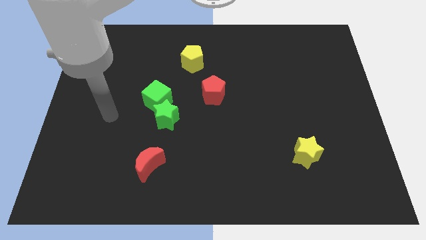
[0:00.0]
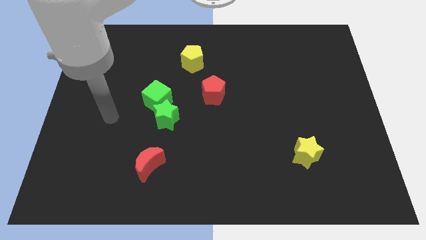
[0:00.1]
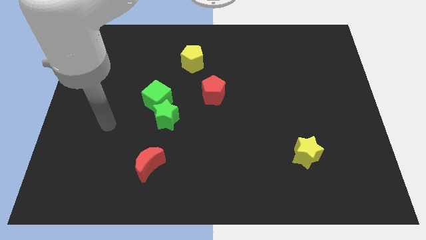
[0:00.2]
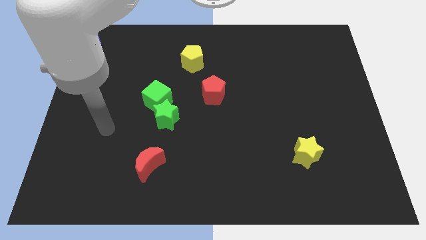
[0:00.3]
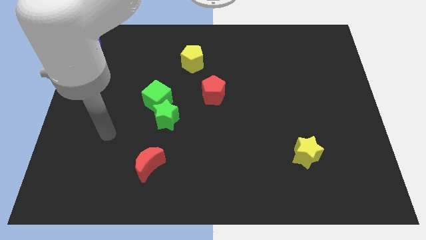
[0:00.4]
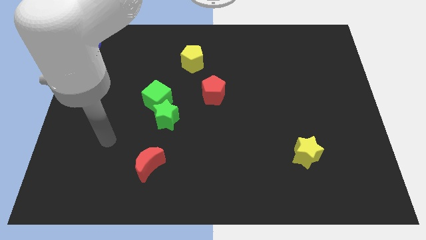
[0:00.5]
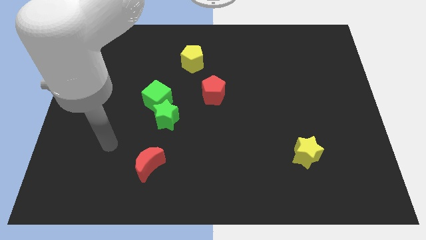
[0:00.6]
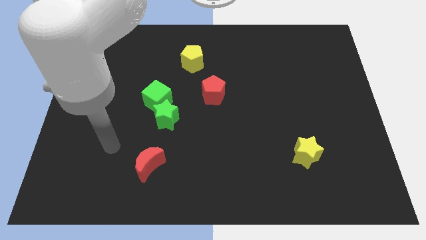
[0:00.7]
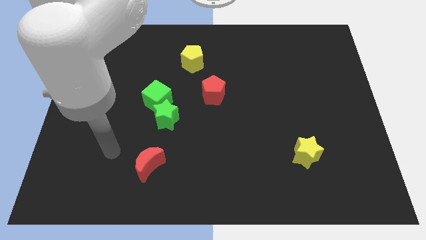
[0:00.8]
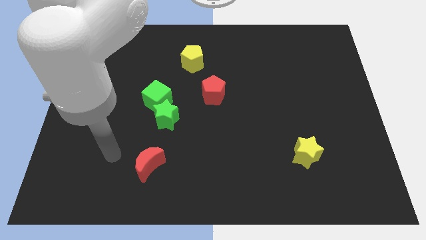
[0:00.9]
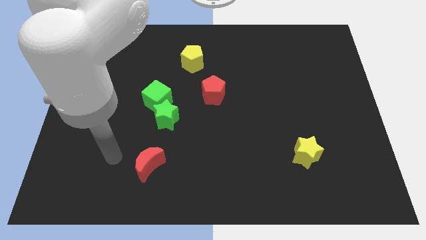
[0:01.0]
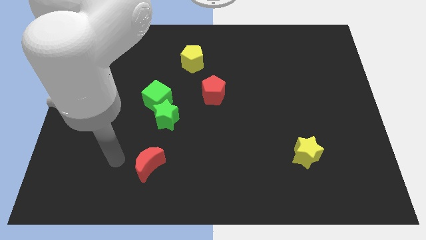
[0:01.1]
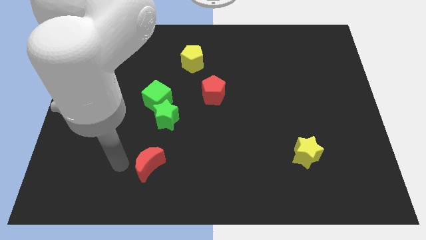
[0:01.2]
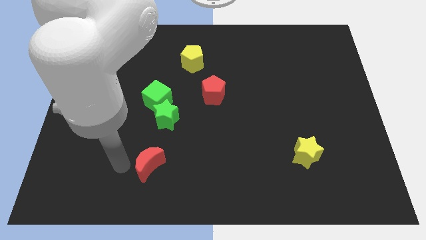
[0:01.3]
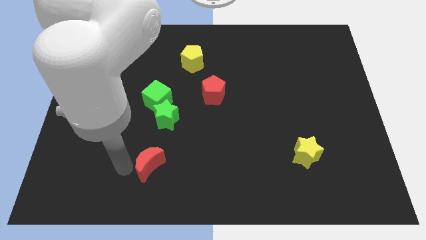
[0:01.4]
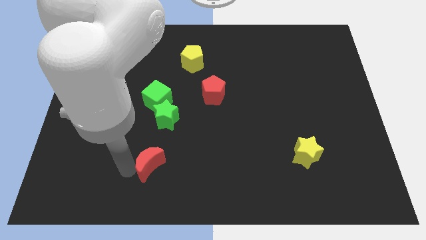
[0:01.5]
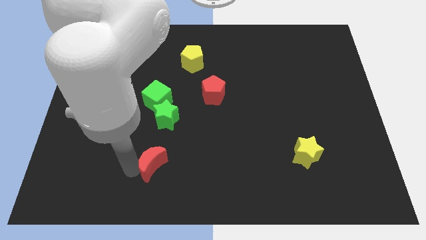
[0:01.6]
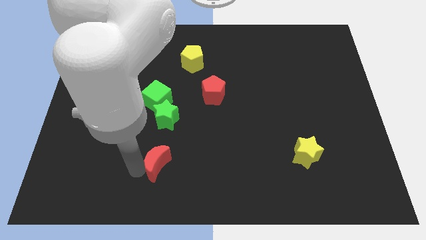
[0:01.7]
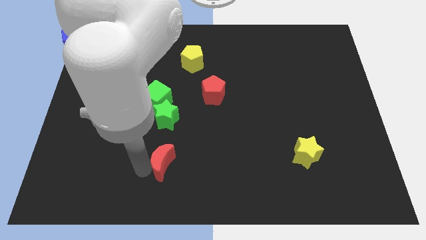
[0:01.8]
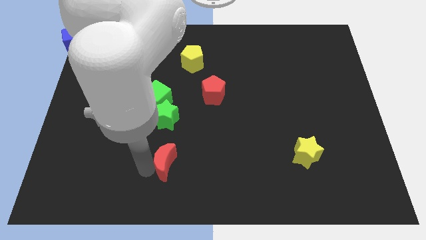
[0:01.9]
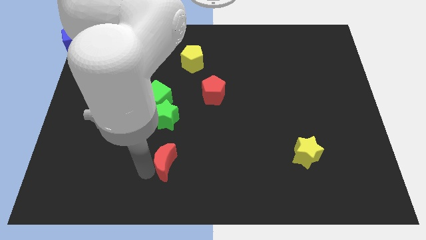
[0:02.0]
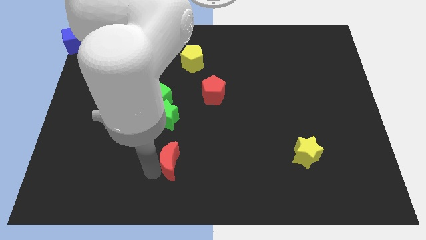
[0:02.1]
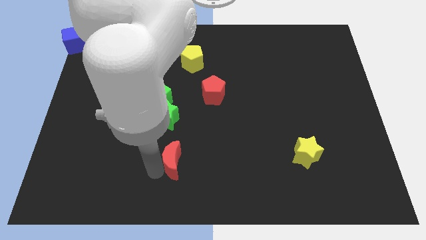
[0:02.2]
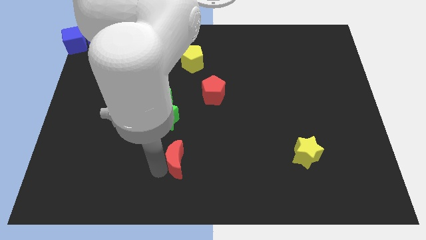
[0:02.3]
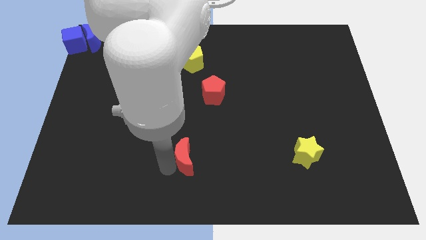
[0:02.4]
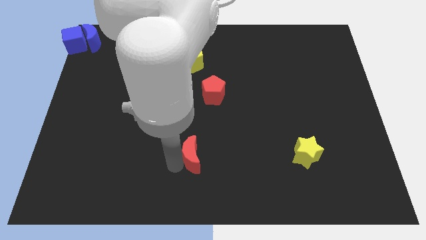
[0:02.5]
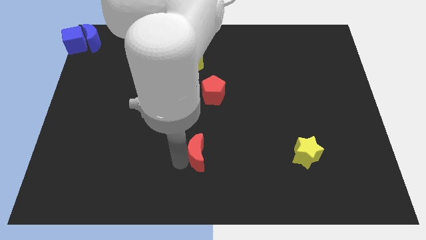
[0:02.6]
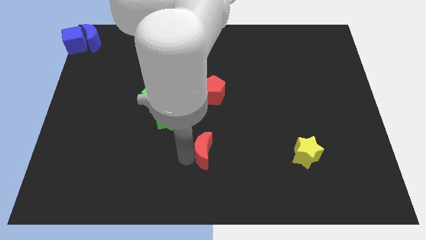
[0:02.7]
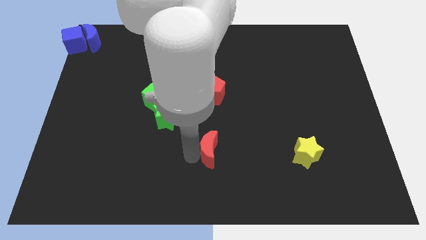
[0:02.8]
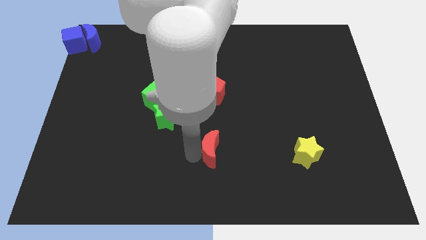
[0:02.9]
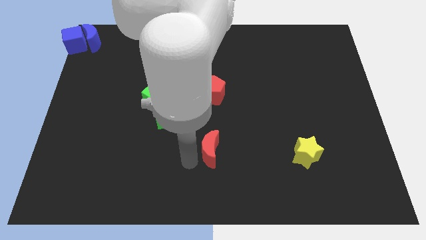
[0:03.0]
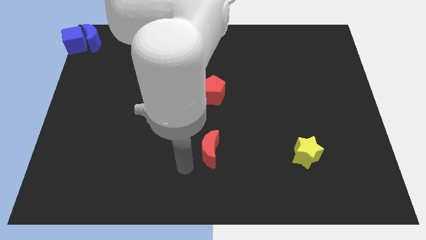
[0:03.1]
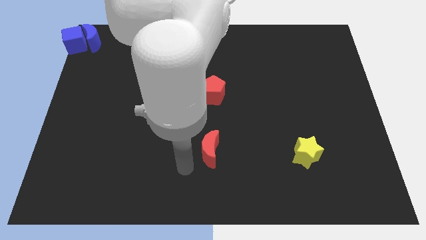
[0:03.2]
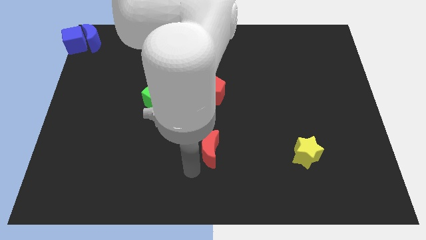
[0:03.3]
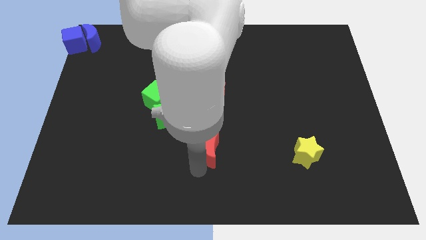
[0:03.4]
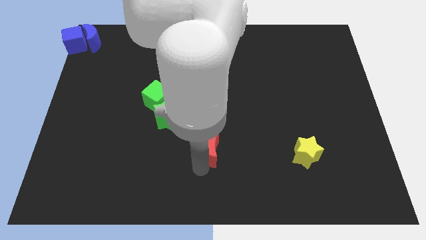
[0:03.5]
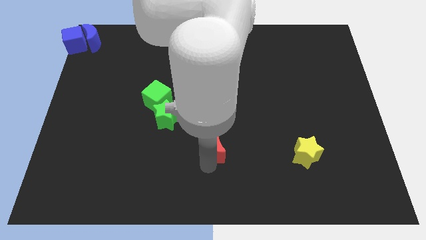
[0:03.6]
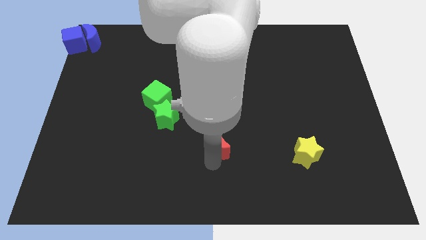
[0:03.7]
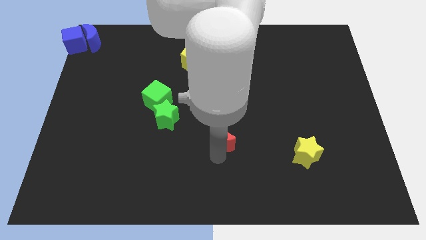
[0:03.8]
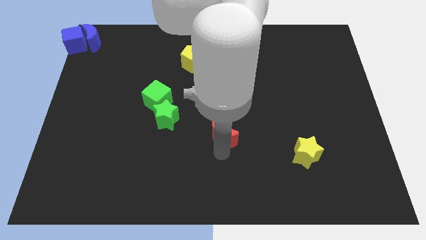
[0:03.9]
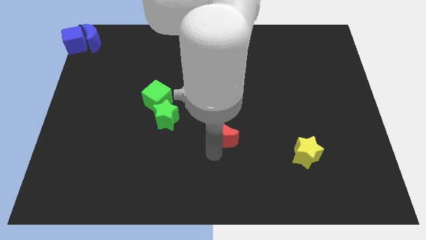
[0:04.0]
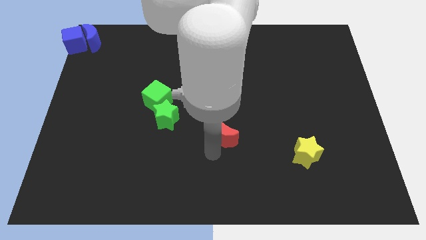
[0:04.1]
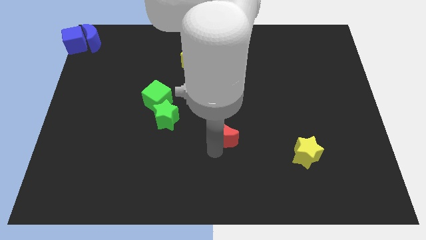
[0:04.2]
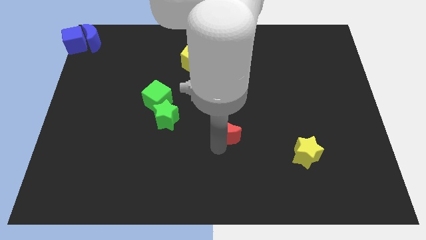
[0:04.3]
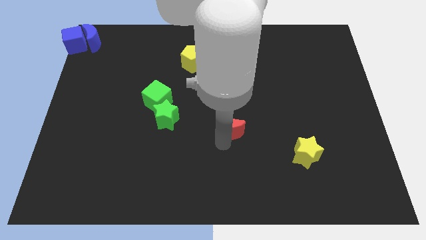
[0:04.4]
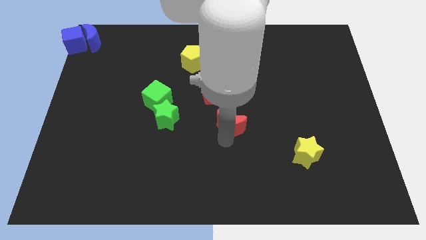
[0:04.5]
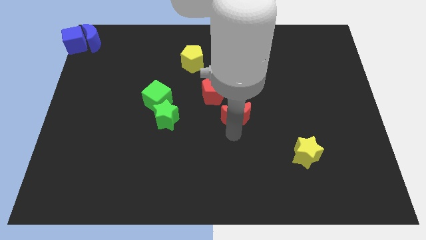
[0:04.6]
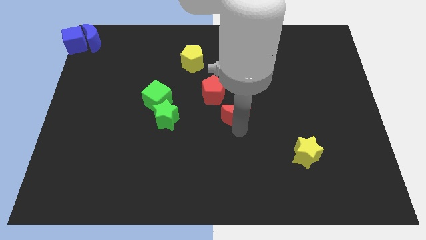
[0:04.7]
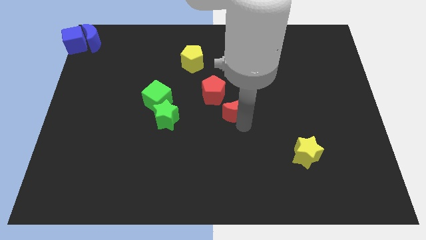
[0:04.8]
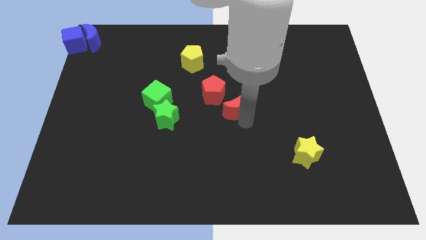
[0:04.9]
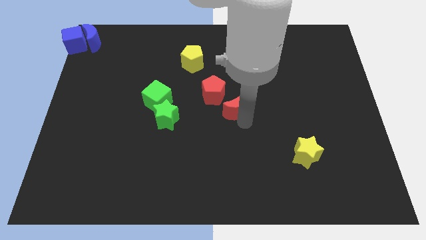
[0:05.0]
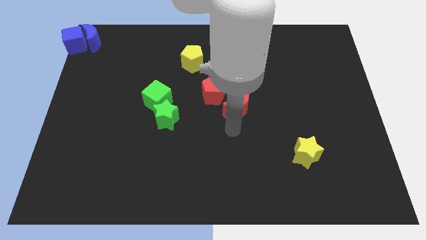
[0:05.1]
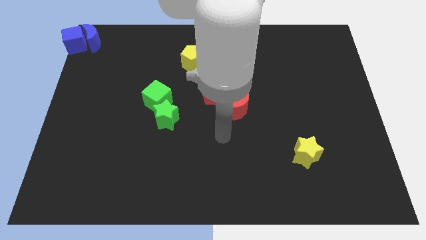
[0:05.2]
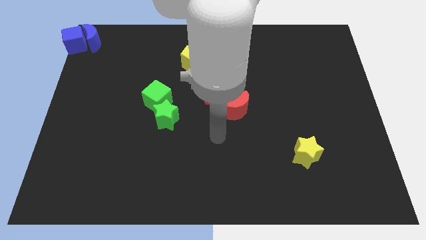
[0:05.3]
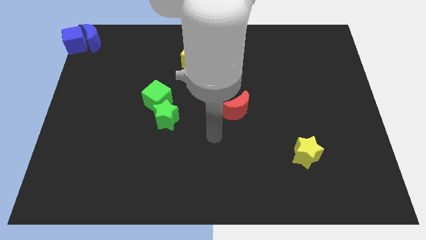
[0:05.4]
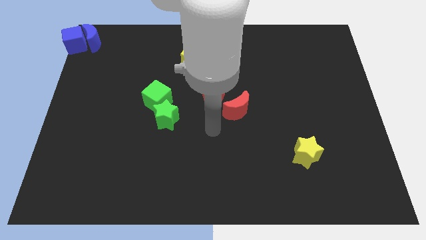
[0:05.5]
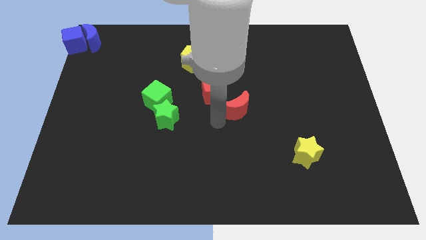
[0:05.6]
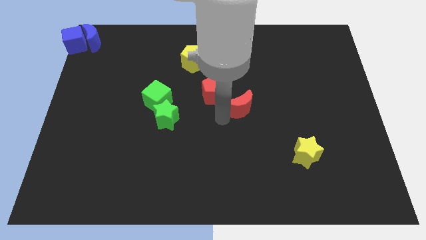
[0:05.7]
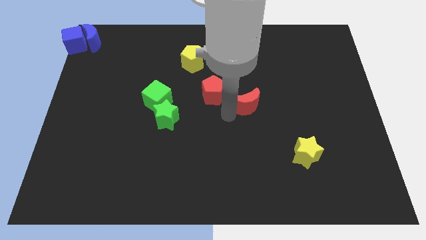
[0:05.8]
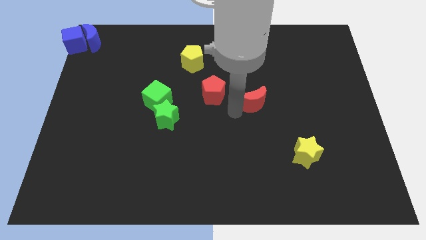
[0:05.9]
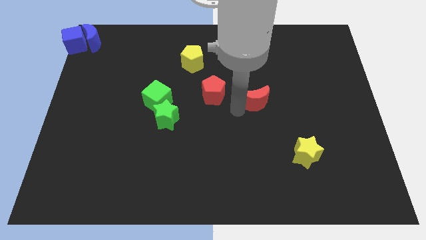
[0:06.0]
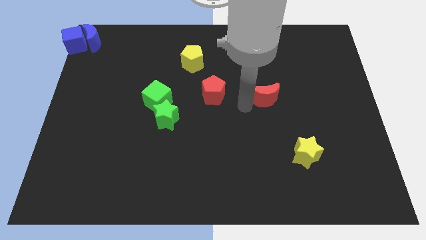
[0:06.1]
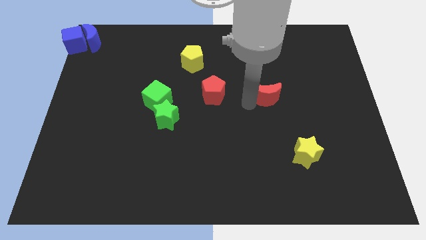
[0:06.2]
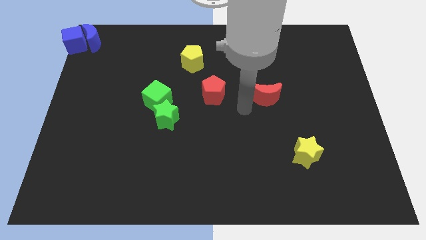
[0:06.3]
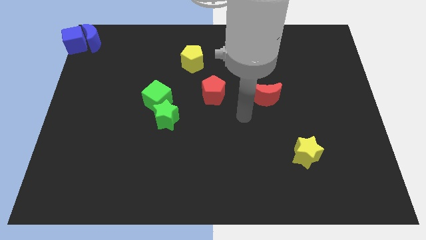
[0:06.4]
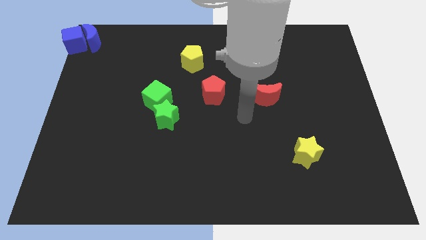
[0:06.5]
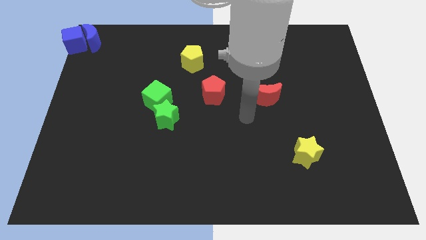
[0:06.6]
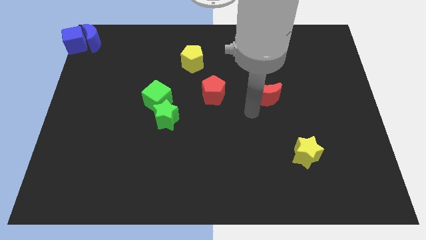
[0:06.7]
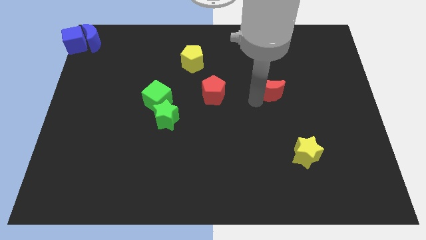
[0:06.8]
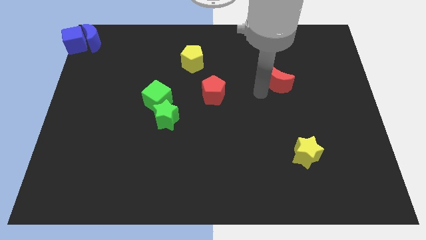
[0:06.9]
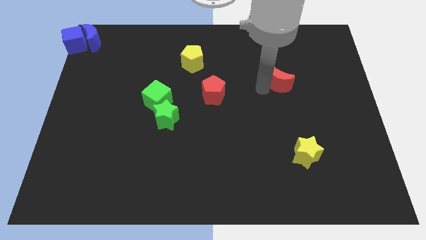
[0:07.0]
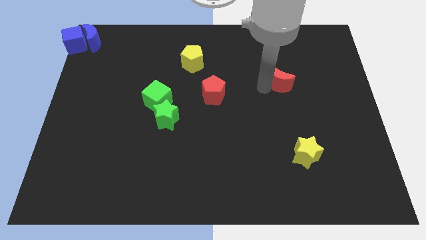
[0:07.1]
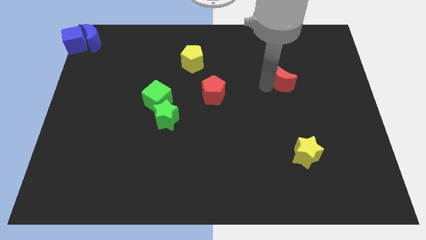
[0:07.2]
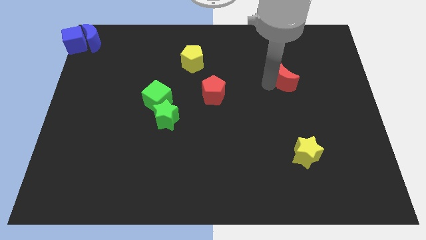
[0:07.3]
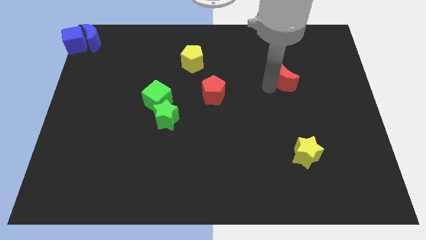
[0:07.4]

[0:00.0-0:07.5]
place the red moon right to the red pentagon

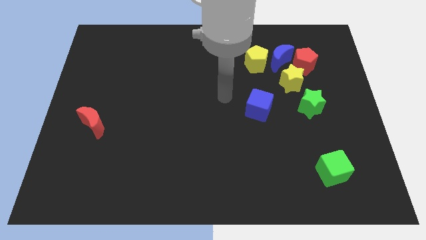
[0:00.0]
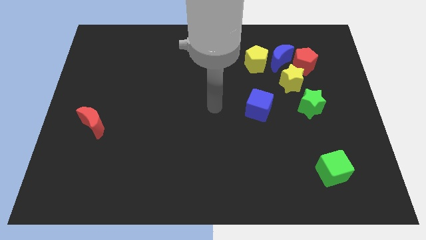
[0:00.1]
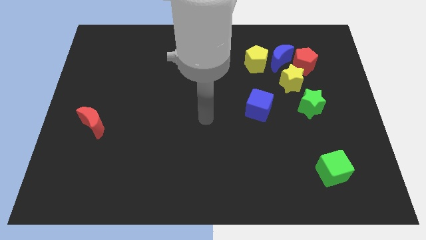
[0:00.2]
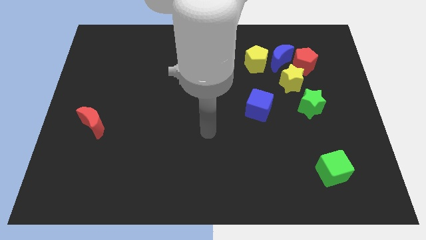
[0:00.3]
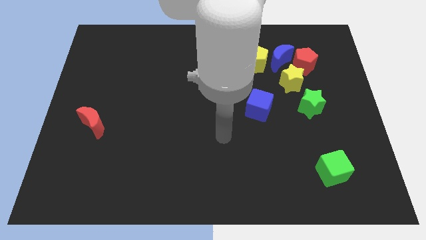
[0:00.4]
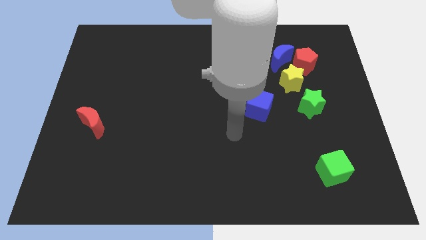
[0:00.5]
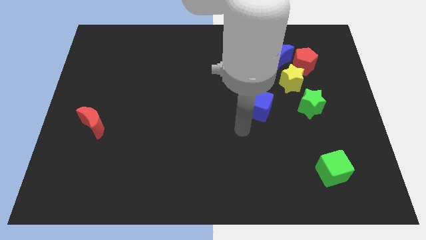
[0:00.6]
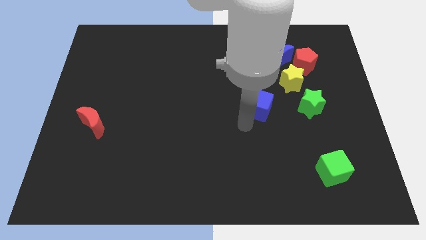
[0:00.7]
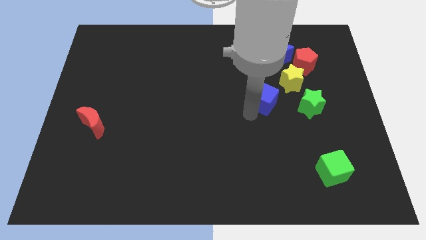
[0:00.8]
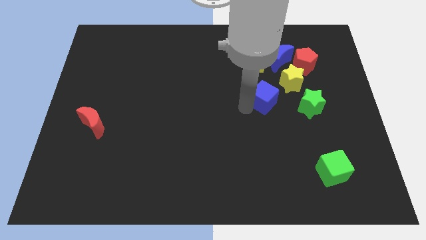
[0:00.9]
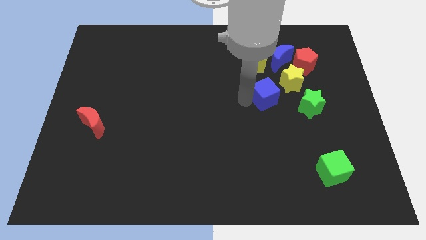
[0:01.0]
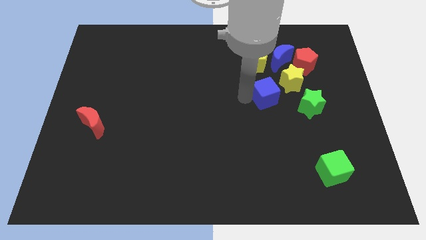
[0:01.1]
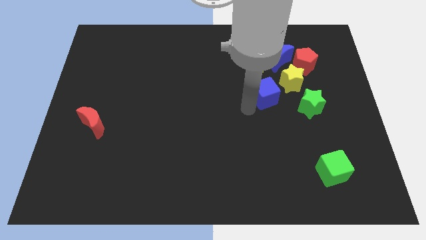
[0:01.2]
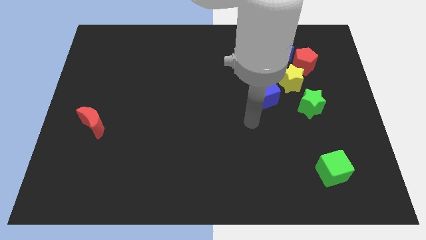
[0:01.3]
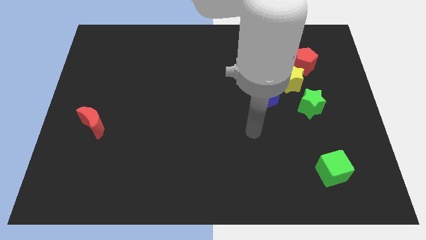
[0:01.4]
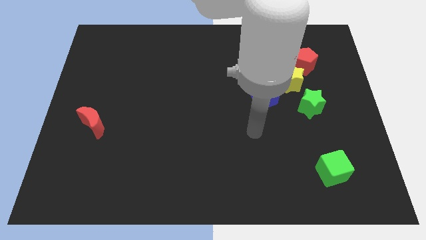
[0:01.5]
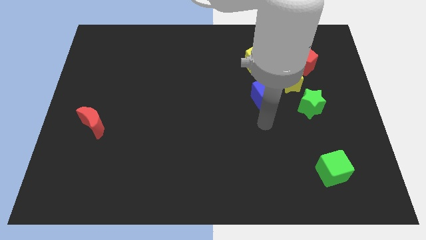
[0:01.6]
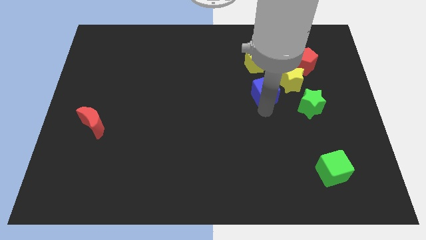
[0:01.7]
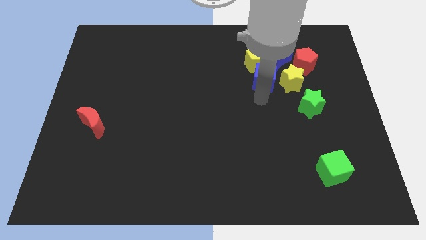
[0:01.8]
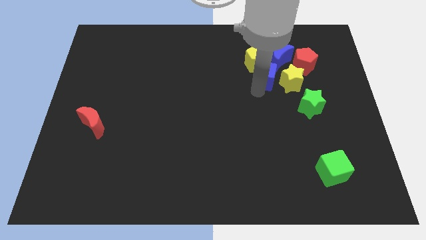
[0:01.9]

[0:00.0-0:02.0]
move the blue cube to the left of the yellow star
